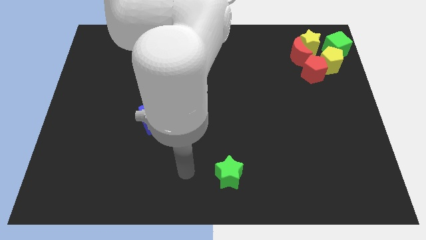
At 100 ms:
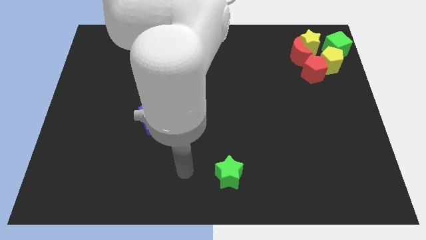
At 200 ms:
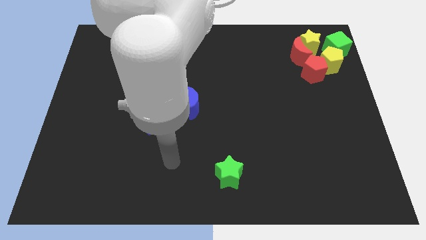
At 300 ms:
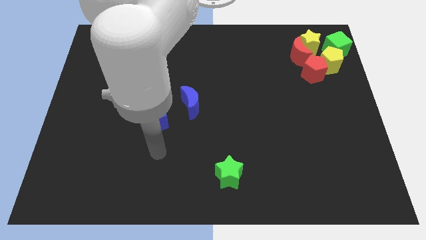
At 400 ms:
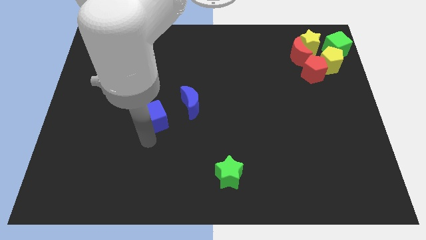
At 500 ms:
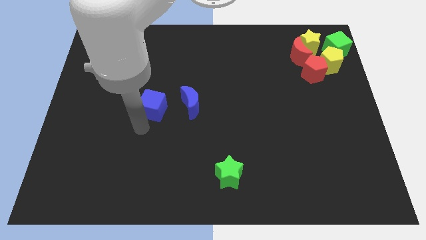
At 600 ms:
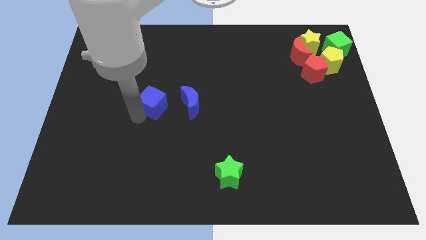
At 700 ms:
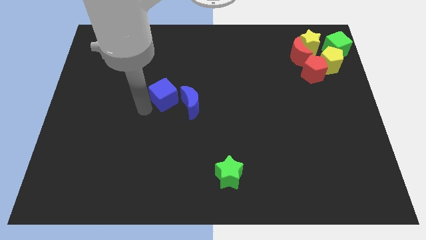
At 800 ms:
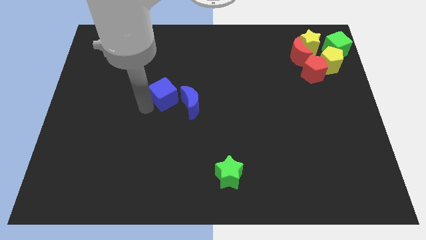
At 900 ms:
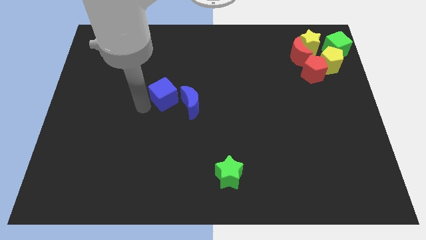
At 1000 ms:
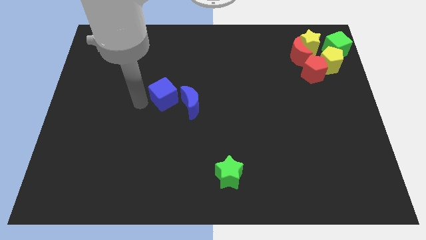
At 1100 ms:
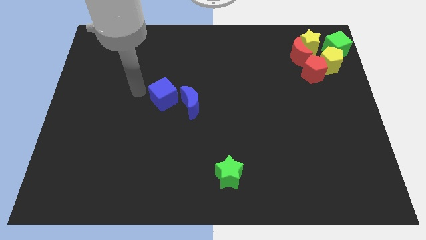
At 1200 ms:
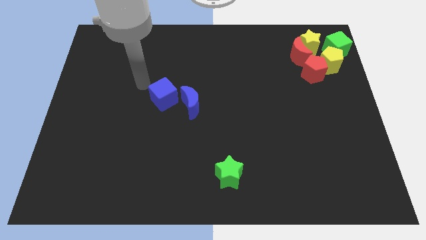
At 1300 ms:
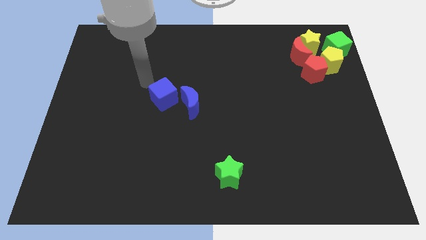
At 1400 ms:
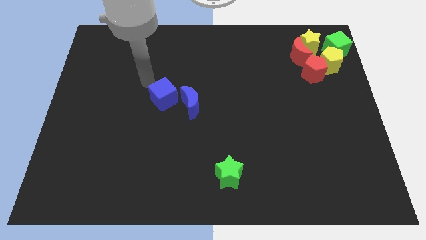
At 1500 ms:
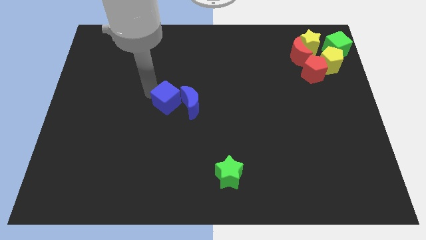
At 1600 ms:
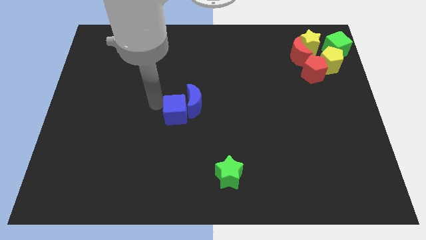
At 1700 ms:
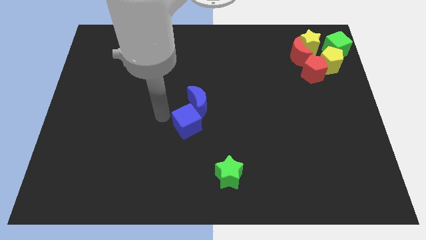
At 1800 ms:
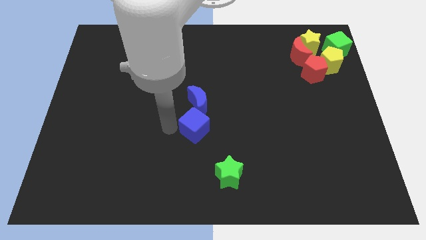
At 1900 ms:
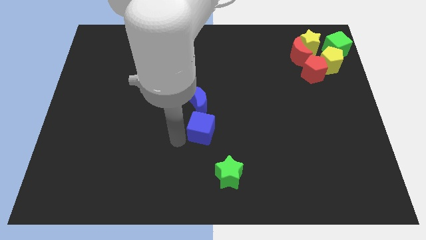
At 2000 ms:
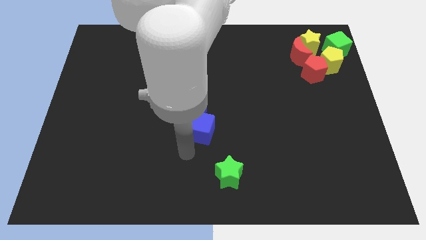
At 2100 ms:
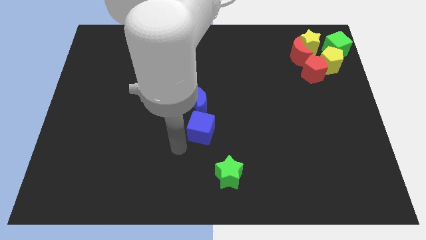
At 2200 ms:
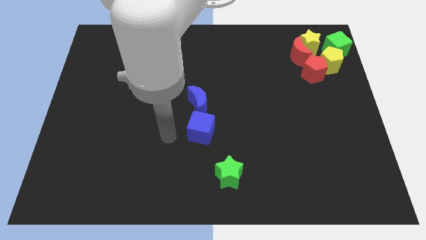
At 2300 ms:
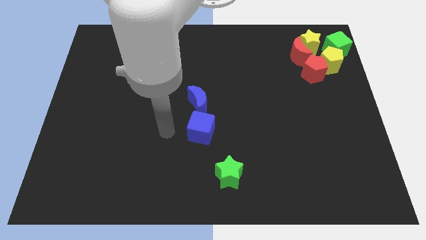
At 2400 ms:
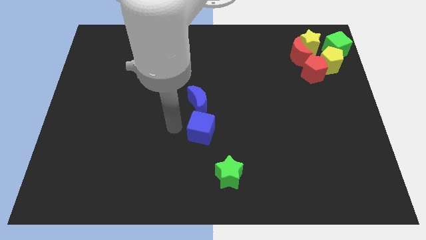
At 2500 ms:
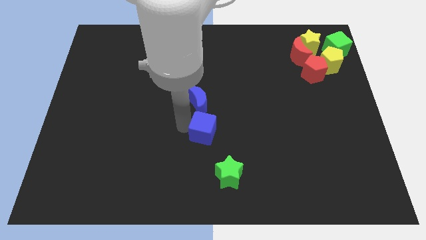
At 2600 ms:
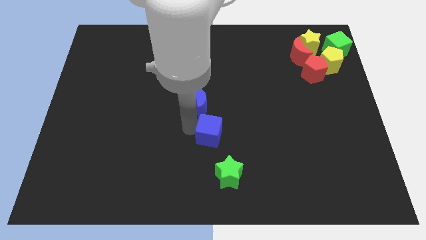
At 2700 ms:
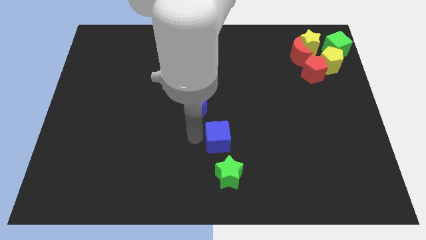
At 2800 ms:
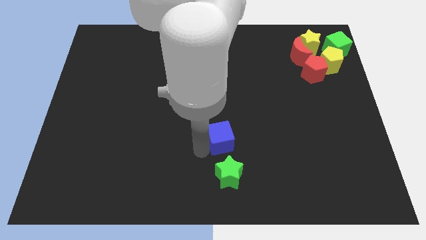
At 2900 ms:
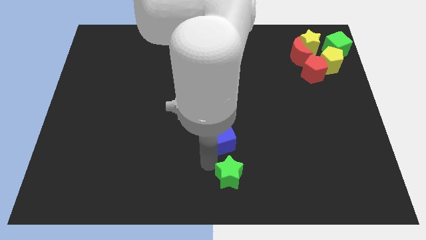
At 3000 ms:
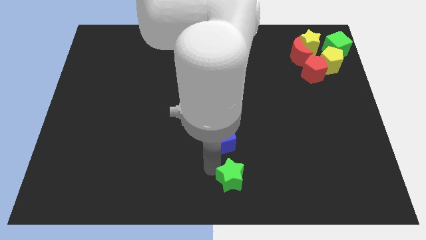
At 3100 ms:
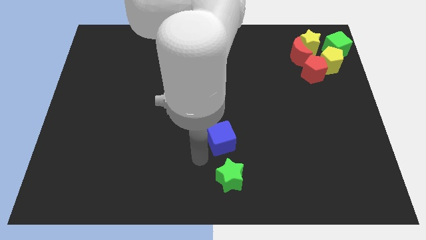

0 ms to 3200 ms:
put the blue cube vertically above the green star

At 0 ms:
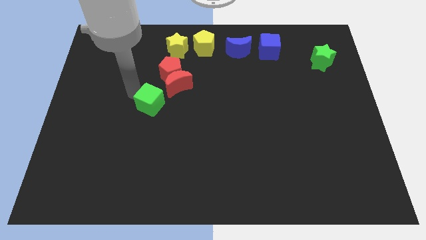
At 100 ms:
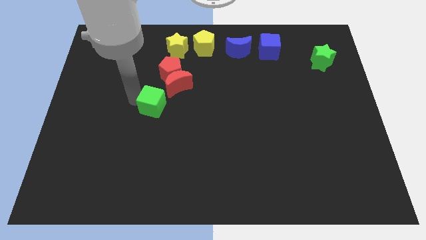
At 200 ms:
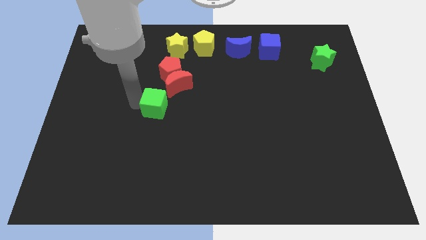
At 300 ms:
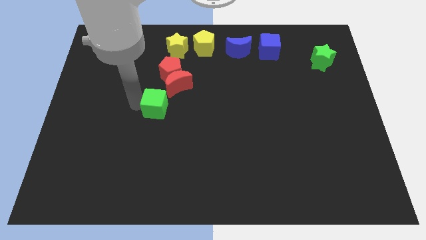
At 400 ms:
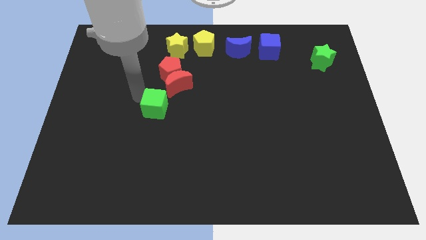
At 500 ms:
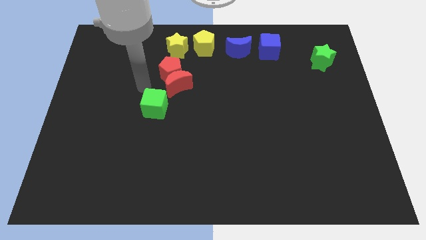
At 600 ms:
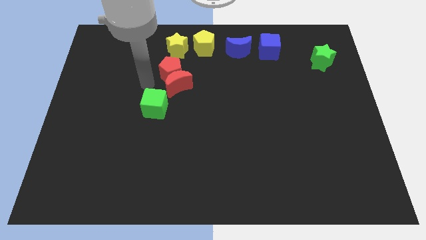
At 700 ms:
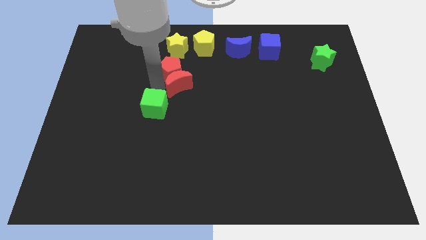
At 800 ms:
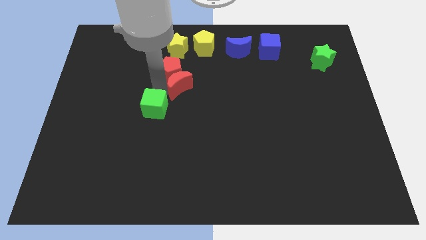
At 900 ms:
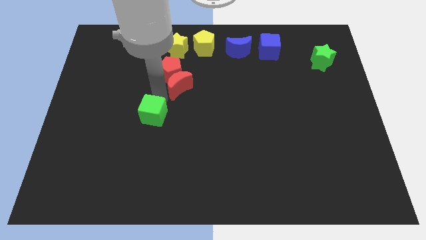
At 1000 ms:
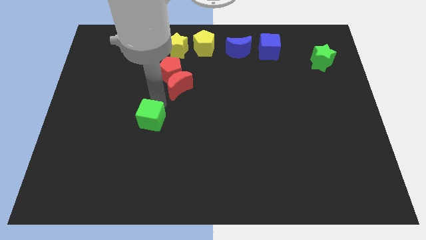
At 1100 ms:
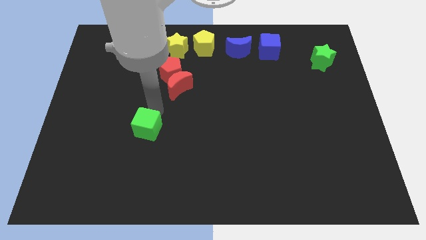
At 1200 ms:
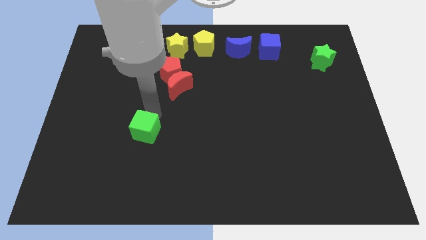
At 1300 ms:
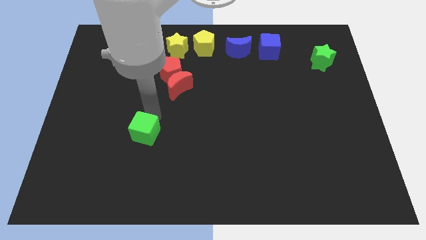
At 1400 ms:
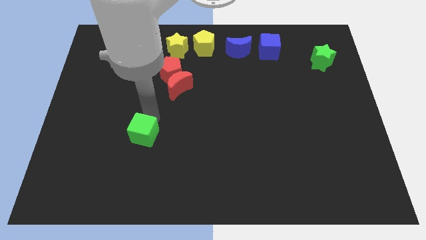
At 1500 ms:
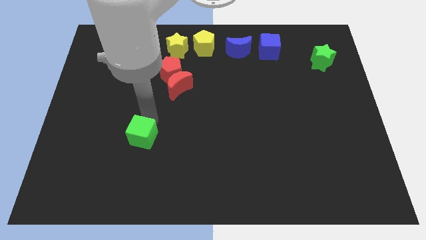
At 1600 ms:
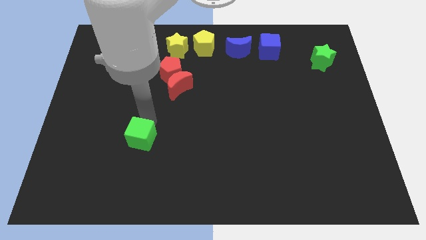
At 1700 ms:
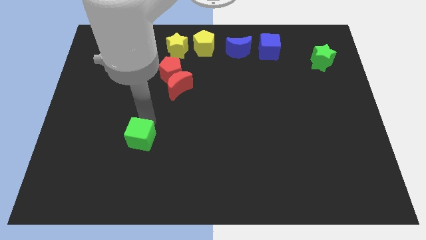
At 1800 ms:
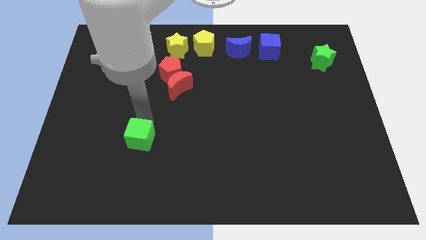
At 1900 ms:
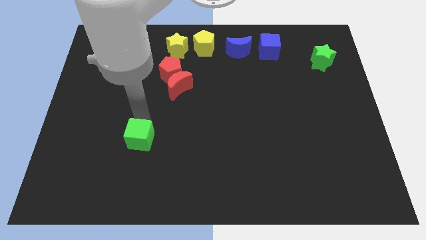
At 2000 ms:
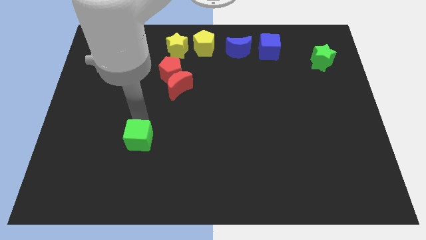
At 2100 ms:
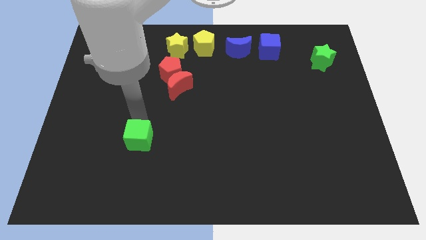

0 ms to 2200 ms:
slide the green cube downwards

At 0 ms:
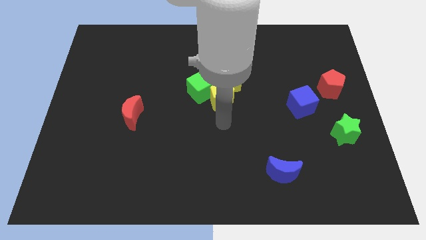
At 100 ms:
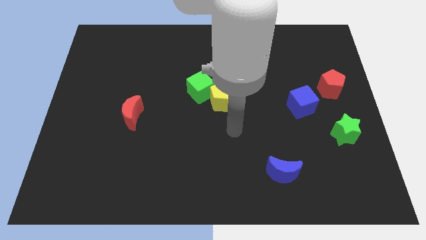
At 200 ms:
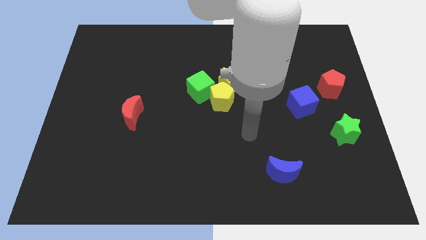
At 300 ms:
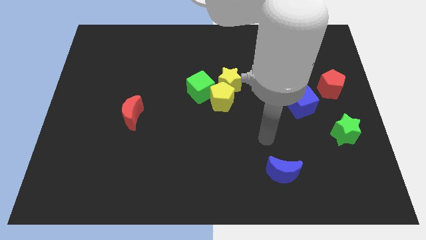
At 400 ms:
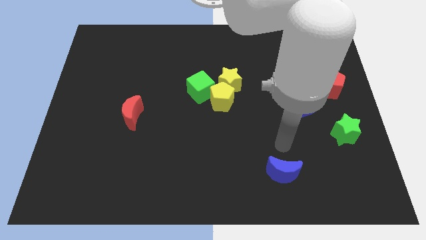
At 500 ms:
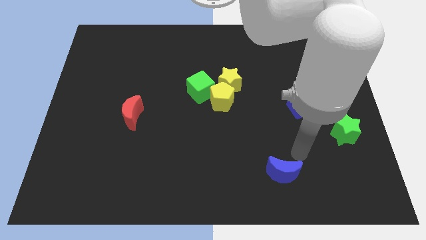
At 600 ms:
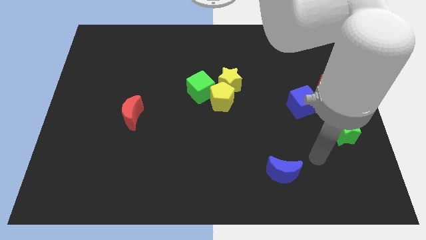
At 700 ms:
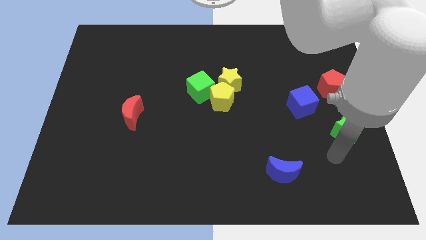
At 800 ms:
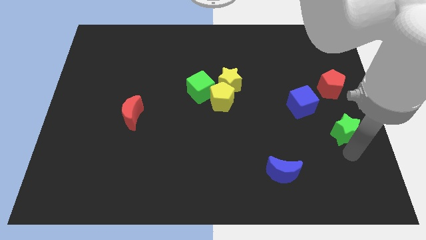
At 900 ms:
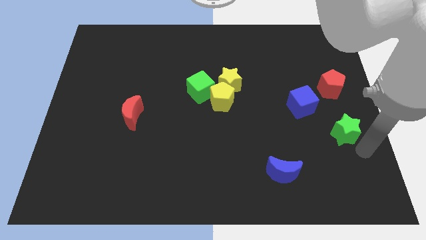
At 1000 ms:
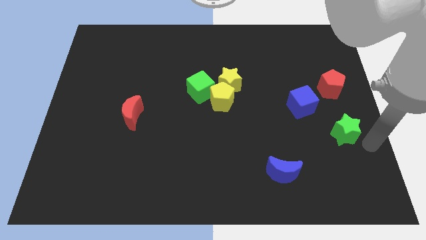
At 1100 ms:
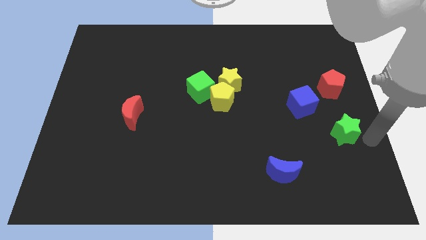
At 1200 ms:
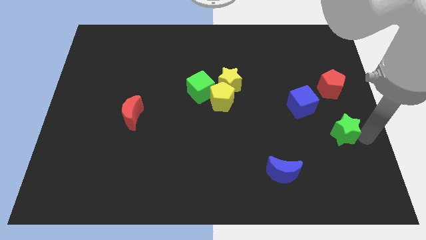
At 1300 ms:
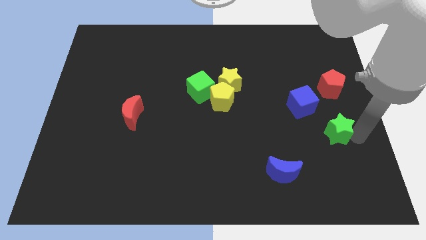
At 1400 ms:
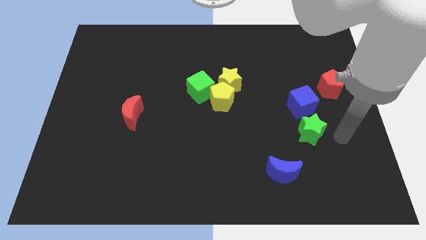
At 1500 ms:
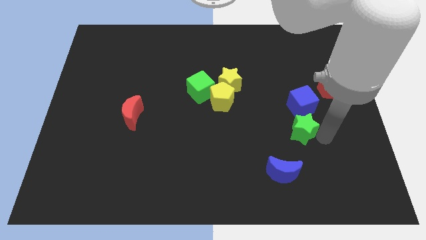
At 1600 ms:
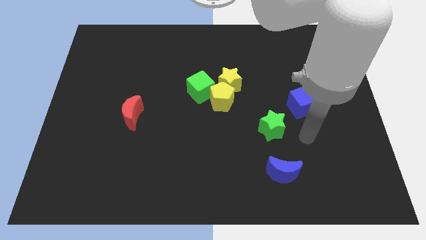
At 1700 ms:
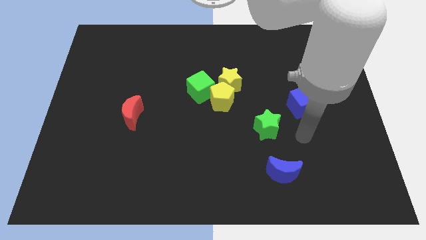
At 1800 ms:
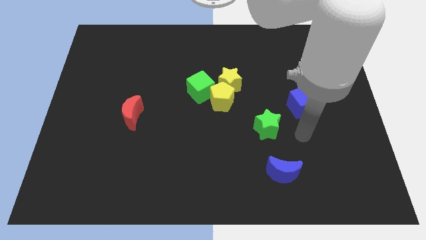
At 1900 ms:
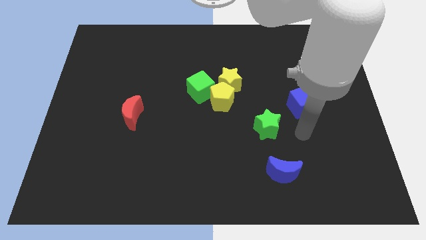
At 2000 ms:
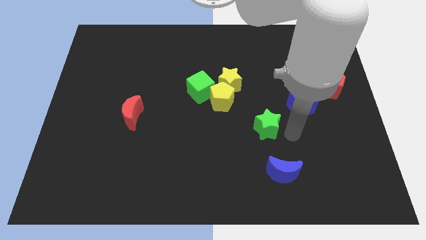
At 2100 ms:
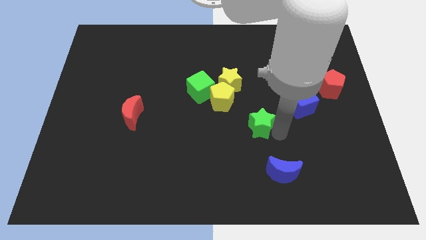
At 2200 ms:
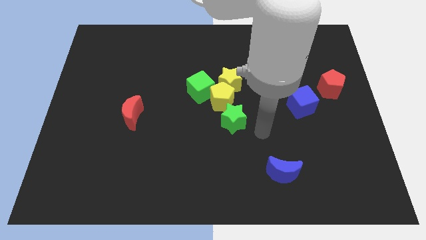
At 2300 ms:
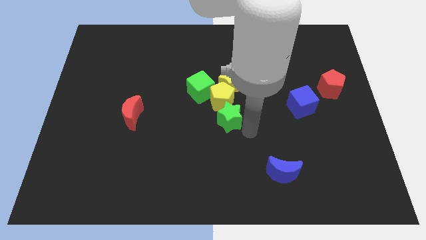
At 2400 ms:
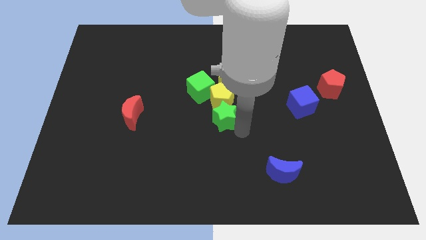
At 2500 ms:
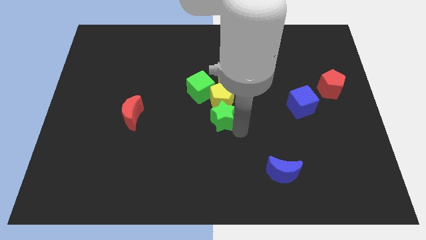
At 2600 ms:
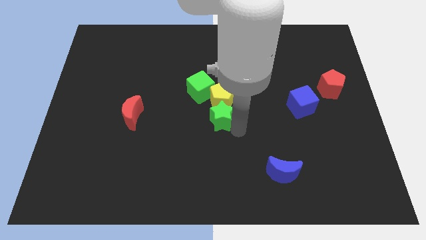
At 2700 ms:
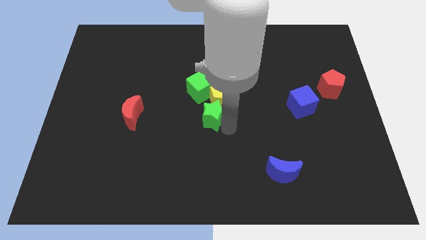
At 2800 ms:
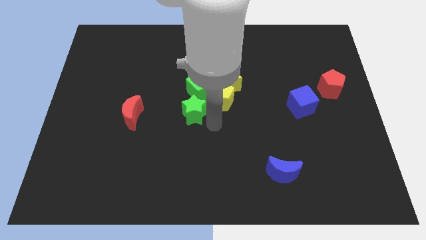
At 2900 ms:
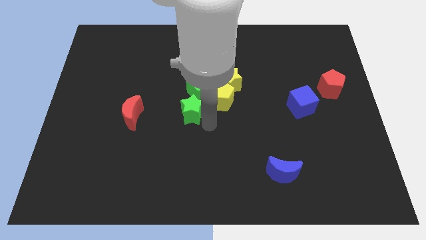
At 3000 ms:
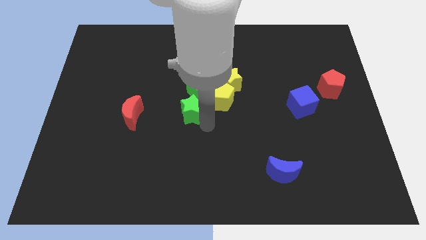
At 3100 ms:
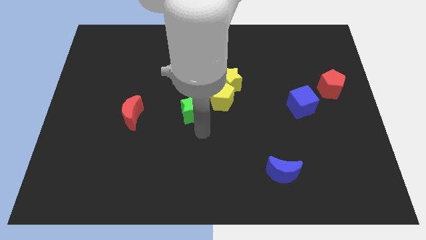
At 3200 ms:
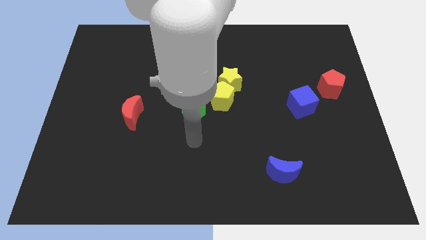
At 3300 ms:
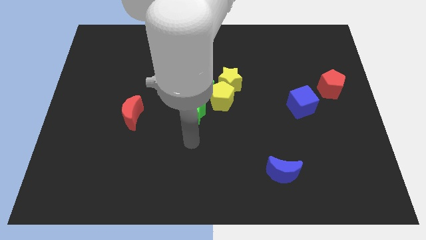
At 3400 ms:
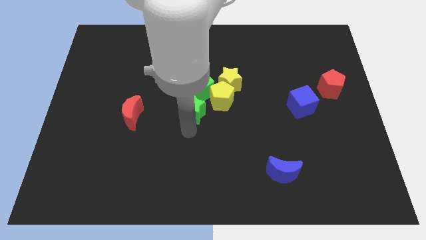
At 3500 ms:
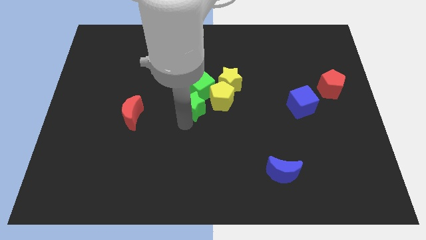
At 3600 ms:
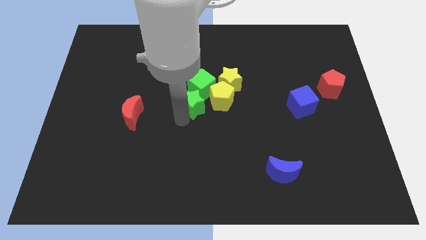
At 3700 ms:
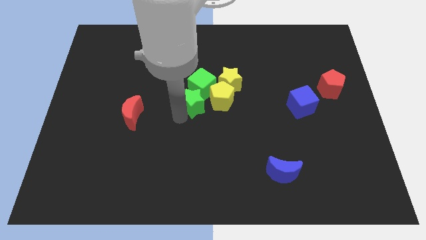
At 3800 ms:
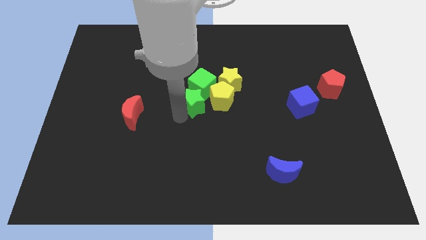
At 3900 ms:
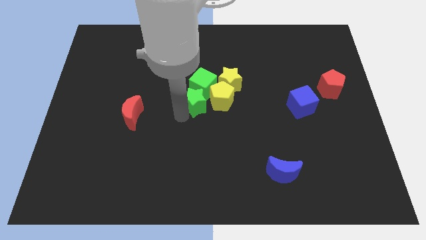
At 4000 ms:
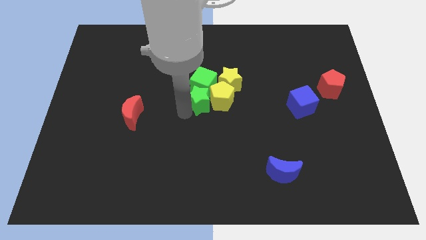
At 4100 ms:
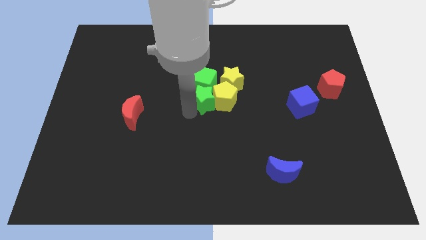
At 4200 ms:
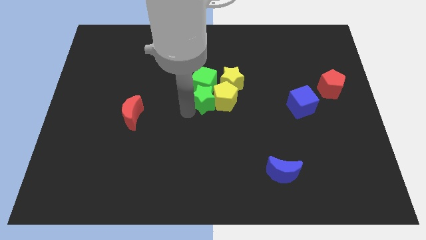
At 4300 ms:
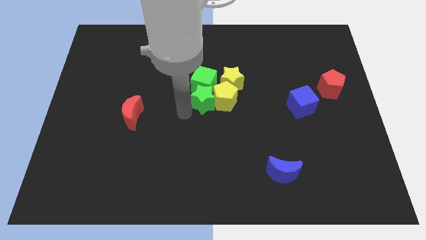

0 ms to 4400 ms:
move the green star at the bottom of the green cube
